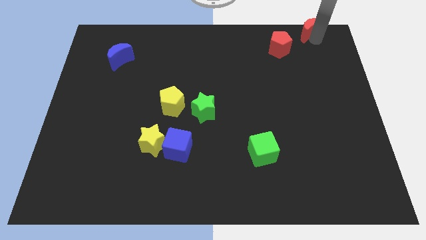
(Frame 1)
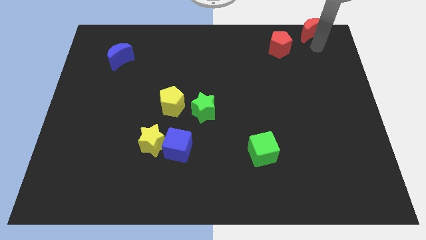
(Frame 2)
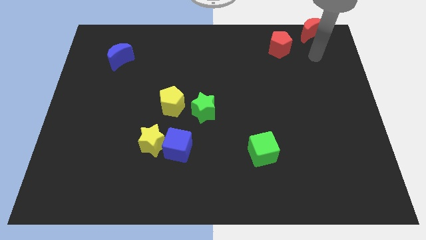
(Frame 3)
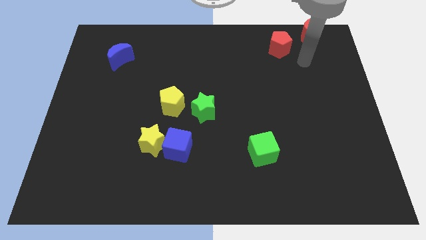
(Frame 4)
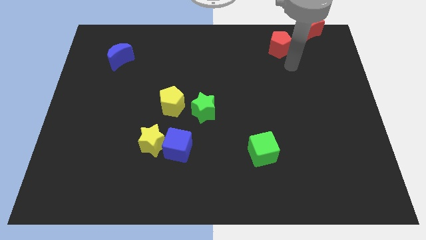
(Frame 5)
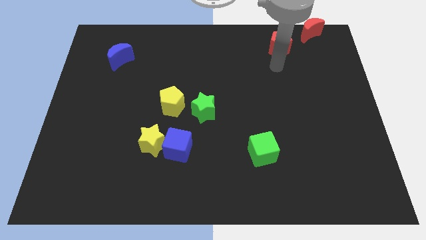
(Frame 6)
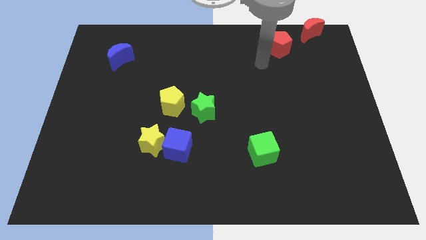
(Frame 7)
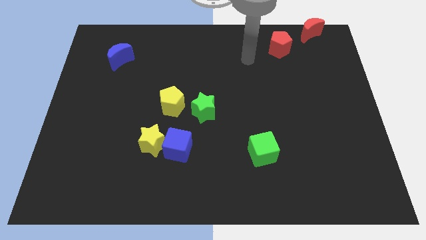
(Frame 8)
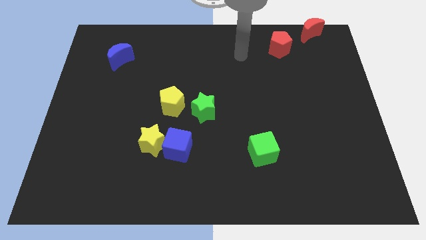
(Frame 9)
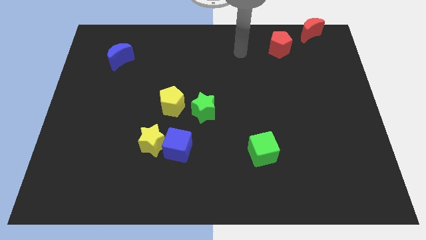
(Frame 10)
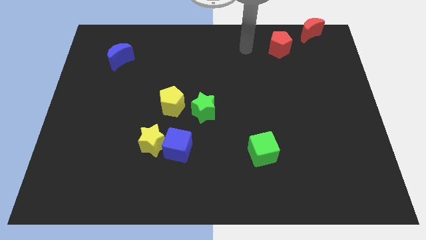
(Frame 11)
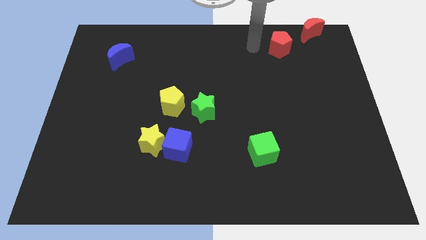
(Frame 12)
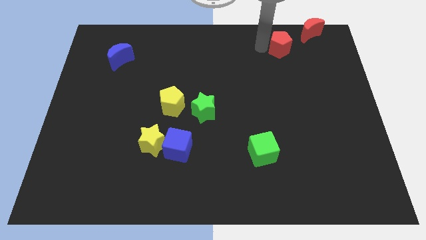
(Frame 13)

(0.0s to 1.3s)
point your arm at the left of the red pentagon

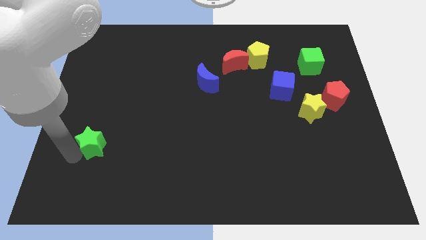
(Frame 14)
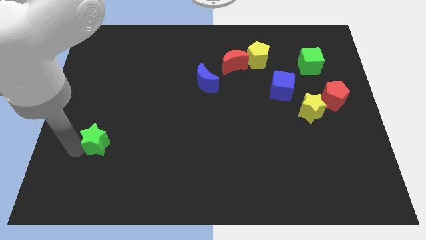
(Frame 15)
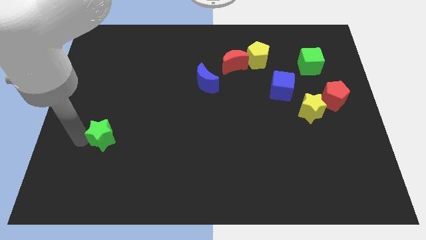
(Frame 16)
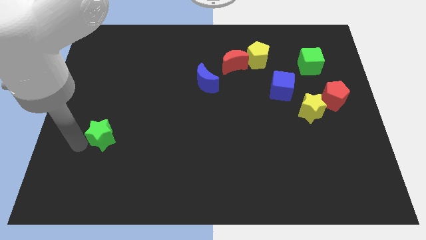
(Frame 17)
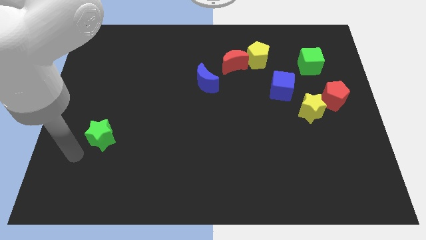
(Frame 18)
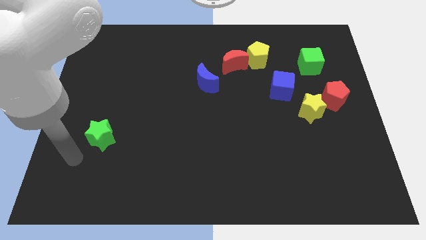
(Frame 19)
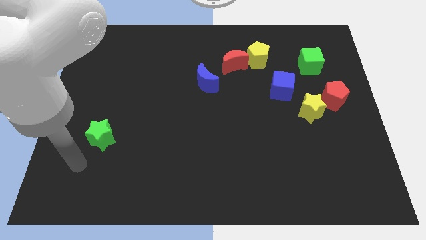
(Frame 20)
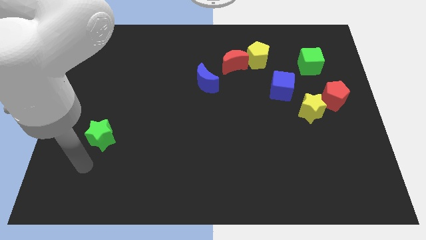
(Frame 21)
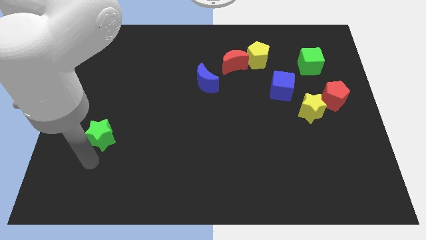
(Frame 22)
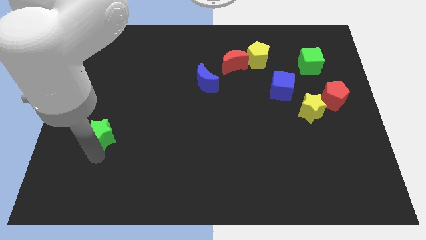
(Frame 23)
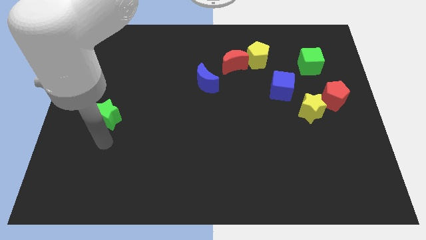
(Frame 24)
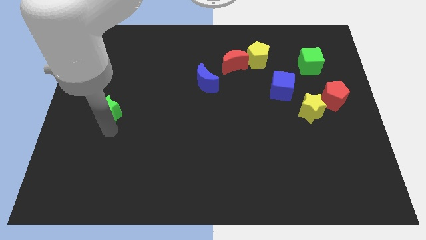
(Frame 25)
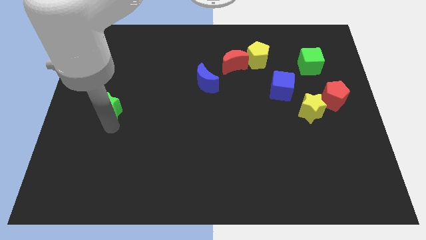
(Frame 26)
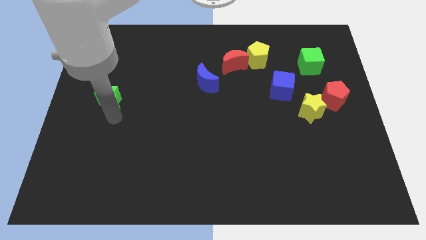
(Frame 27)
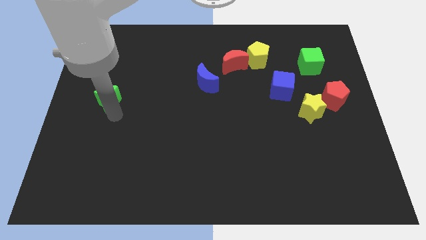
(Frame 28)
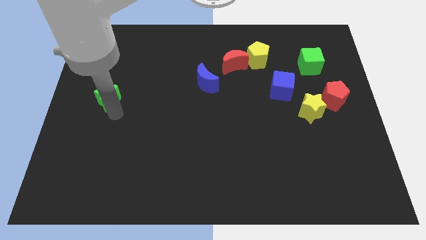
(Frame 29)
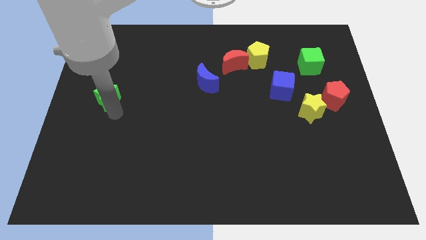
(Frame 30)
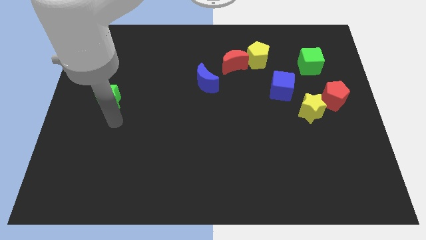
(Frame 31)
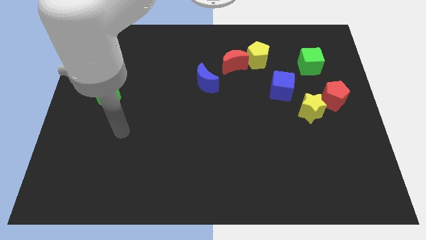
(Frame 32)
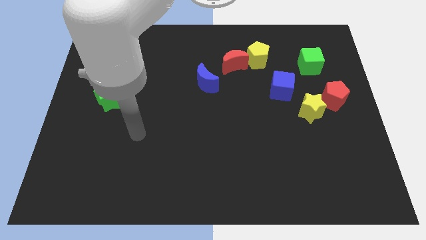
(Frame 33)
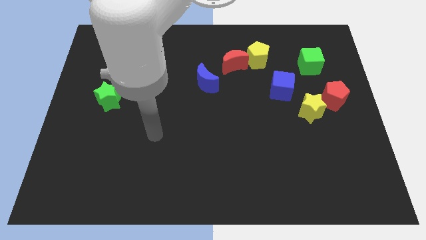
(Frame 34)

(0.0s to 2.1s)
slide green star upward parallel to yellow star

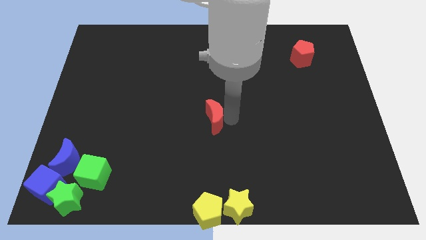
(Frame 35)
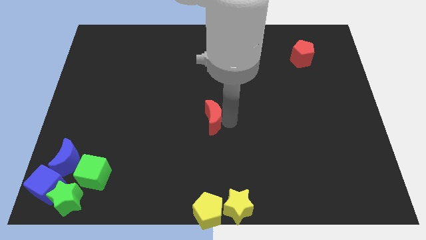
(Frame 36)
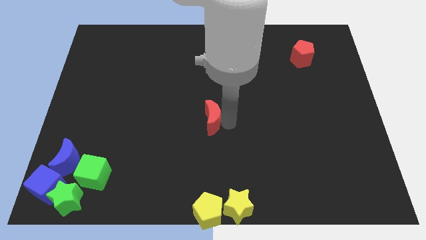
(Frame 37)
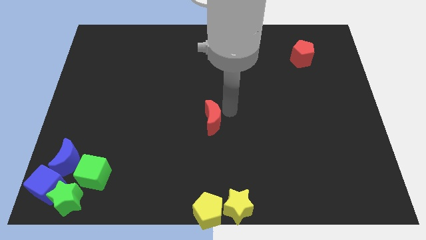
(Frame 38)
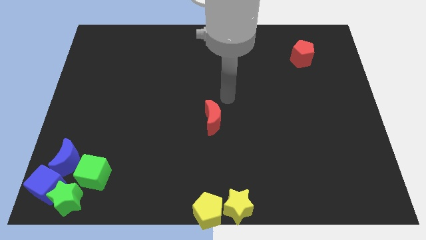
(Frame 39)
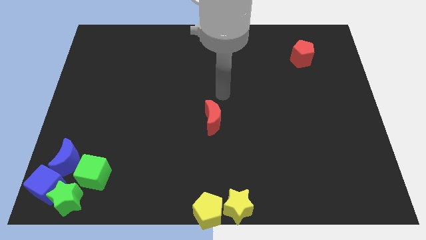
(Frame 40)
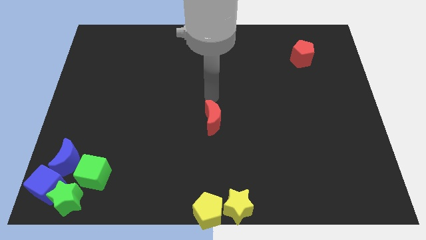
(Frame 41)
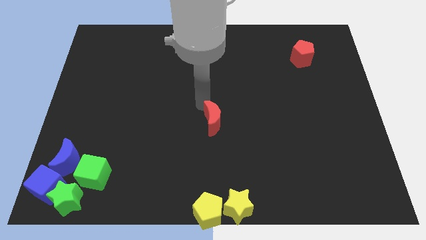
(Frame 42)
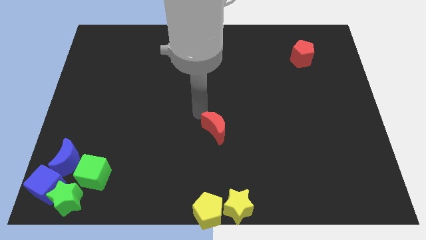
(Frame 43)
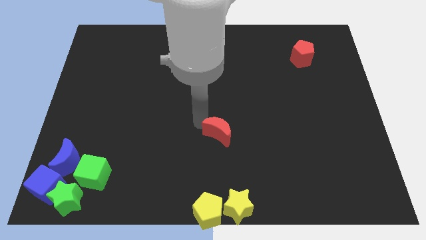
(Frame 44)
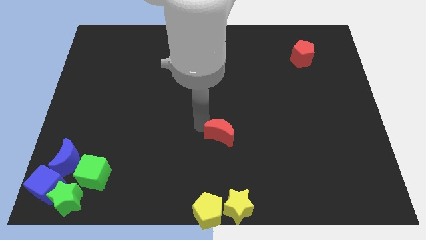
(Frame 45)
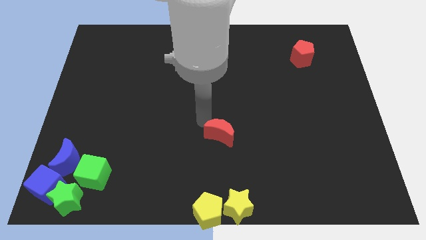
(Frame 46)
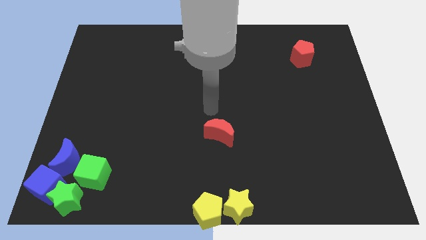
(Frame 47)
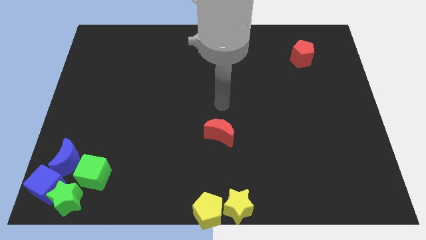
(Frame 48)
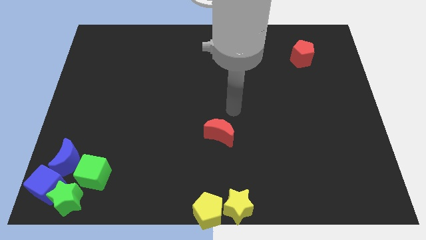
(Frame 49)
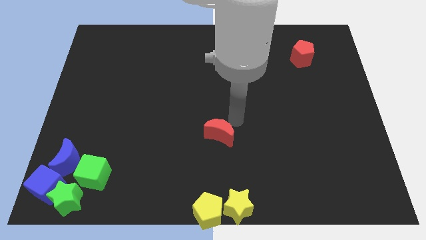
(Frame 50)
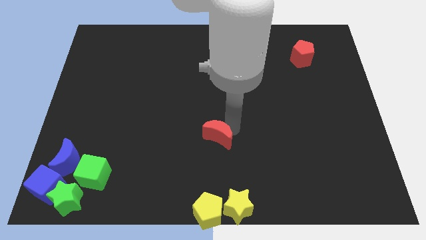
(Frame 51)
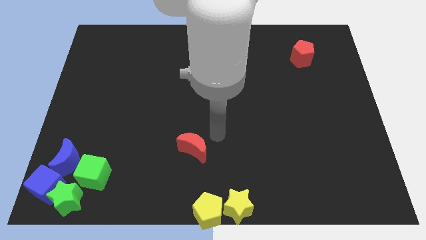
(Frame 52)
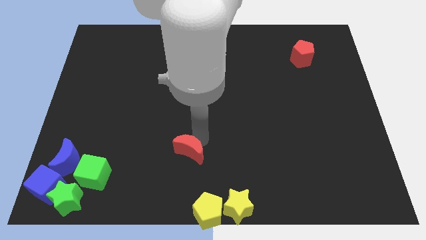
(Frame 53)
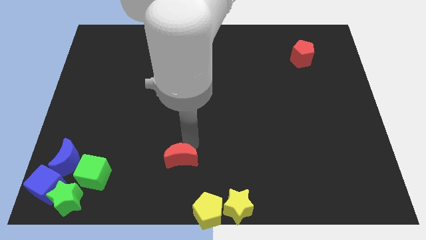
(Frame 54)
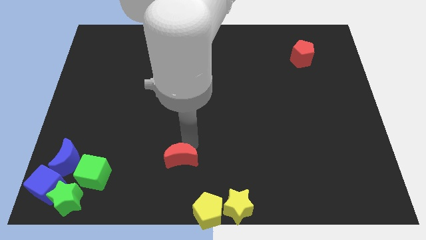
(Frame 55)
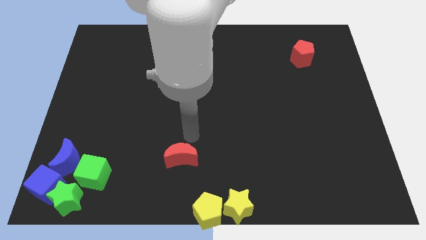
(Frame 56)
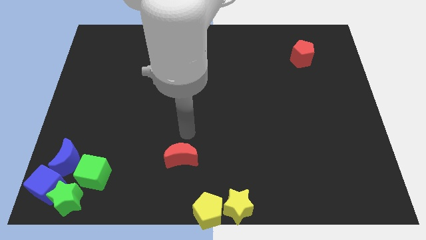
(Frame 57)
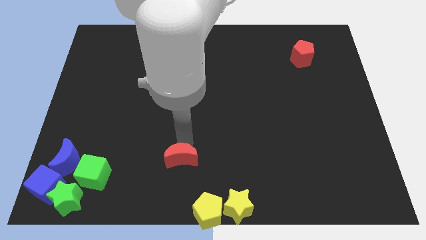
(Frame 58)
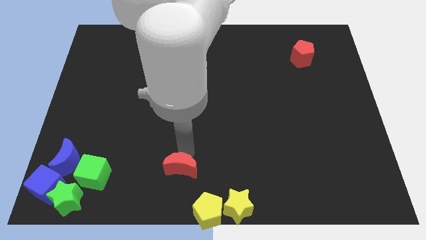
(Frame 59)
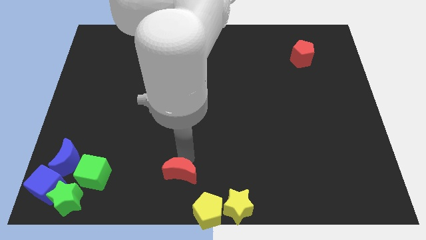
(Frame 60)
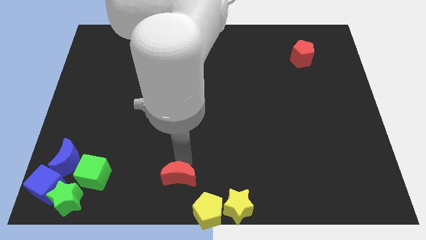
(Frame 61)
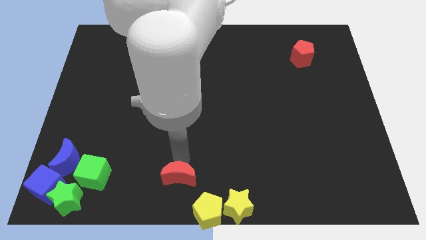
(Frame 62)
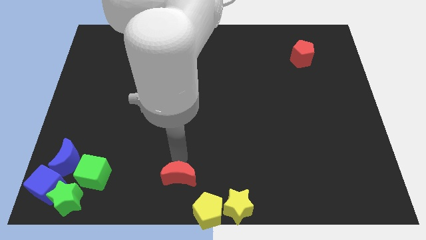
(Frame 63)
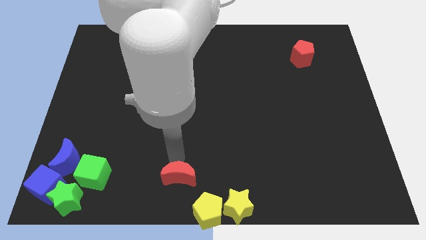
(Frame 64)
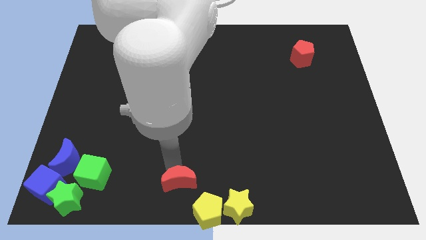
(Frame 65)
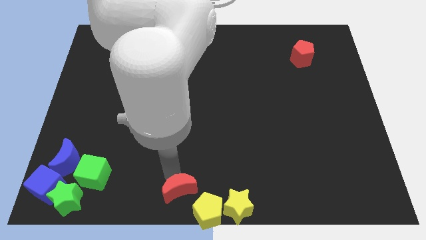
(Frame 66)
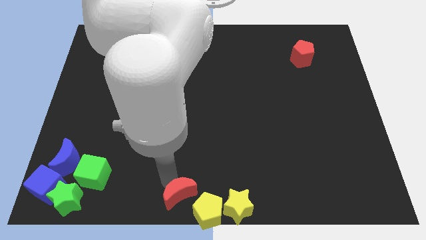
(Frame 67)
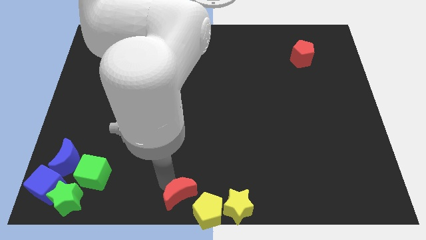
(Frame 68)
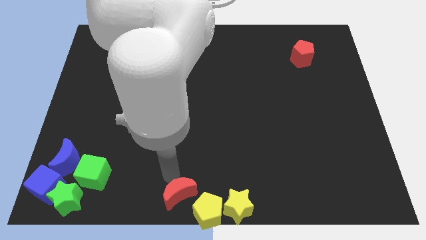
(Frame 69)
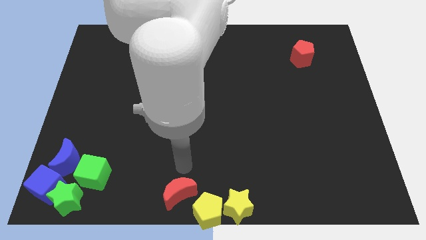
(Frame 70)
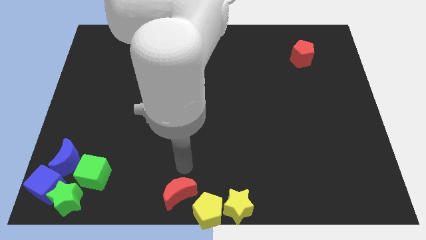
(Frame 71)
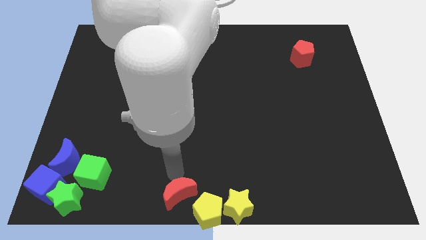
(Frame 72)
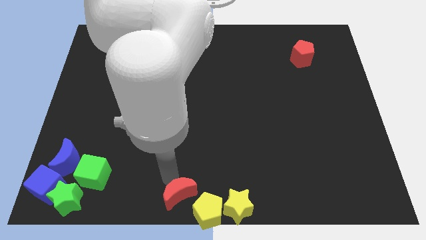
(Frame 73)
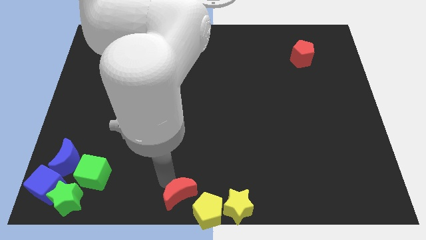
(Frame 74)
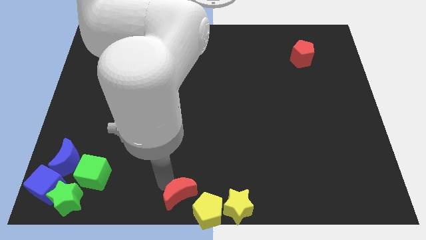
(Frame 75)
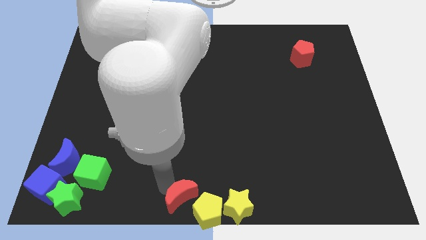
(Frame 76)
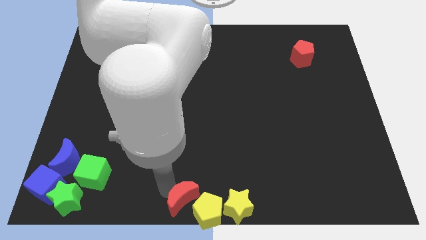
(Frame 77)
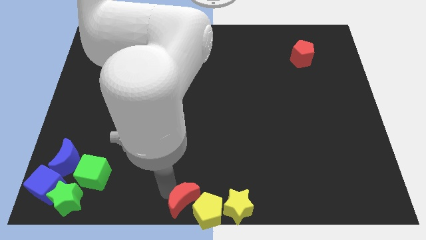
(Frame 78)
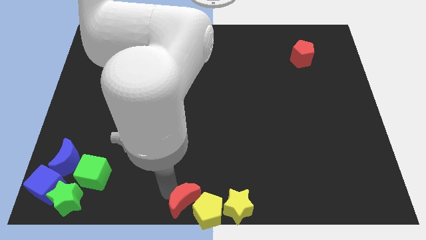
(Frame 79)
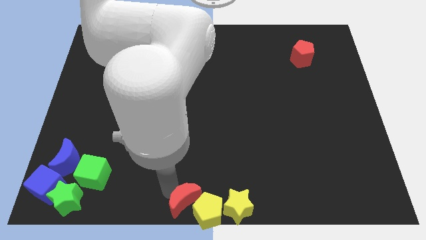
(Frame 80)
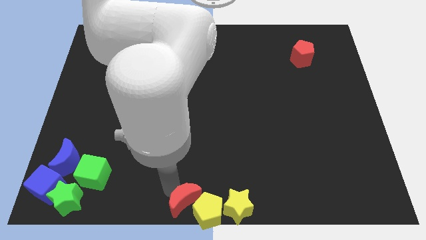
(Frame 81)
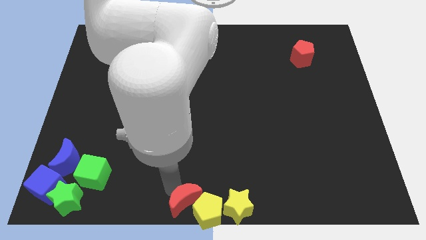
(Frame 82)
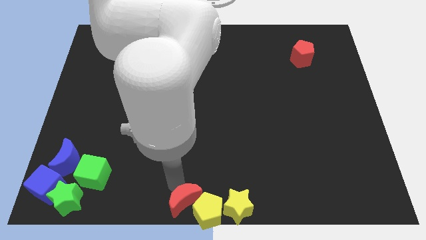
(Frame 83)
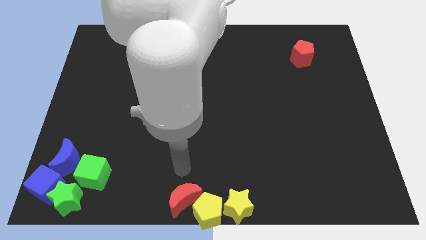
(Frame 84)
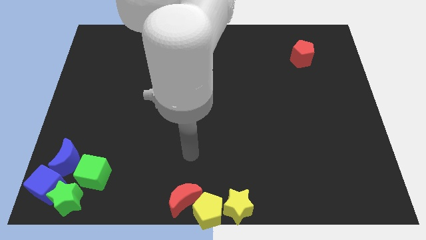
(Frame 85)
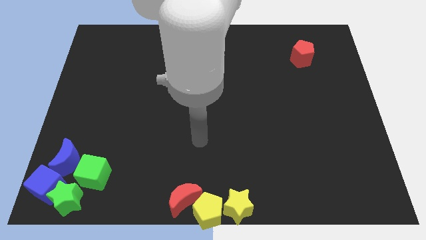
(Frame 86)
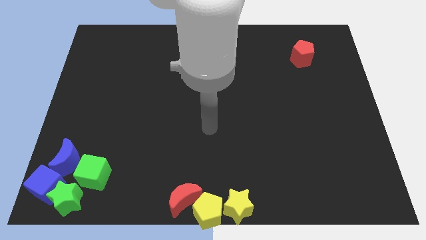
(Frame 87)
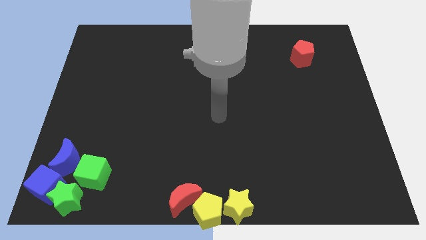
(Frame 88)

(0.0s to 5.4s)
place the red crescent into the yellow pentagon

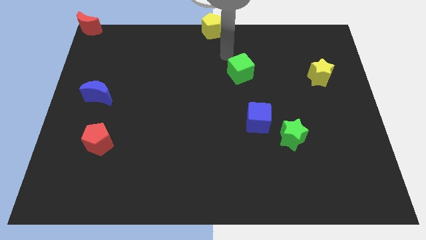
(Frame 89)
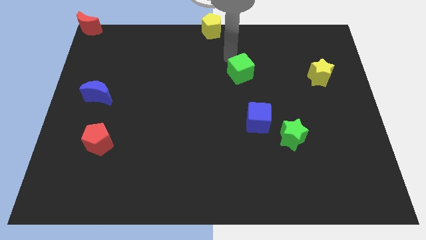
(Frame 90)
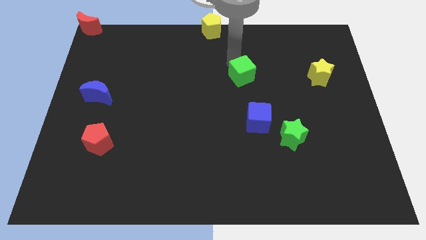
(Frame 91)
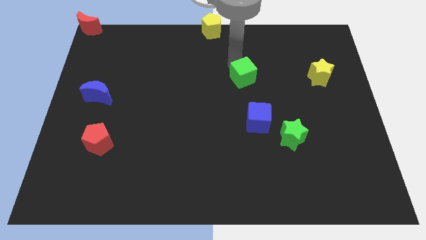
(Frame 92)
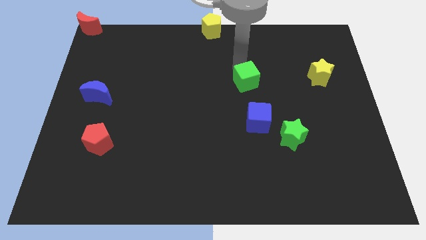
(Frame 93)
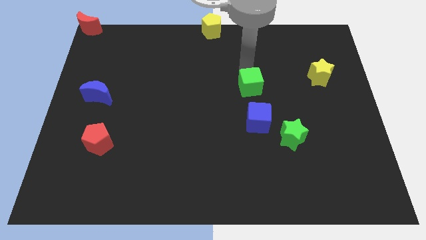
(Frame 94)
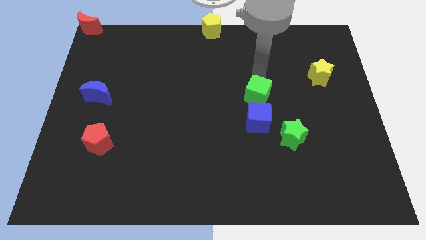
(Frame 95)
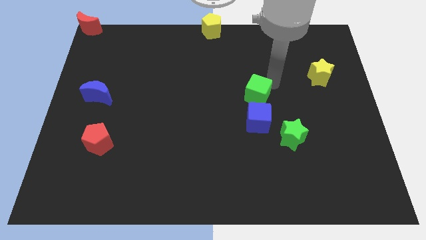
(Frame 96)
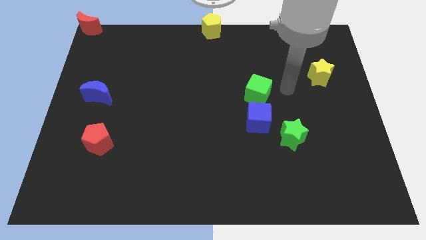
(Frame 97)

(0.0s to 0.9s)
push the green cube close to the blue cube
